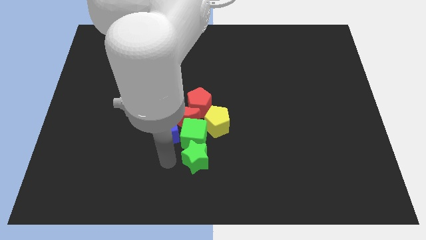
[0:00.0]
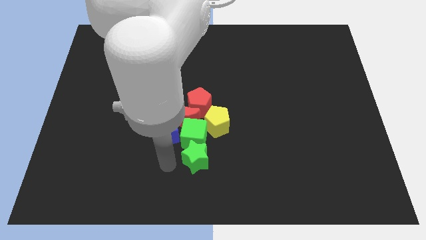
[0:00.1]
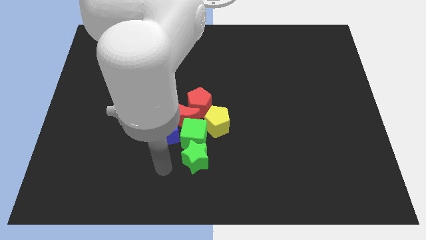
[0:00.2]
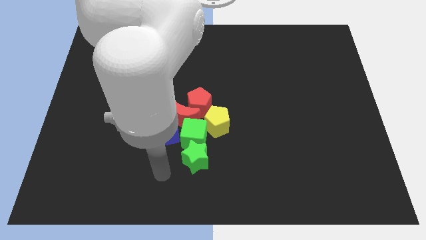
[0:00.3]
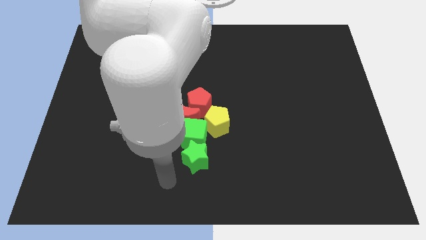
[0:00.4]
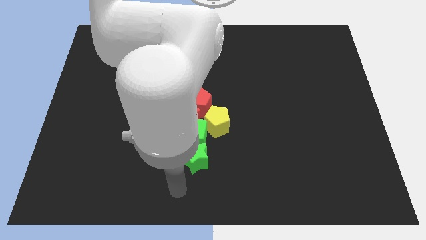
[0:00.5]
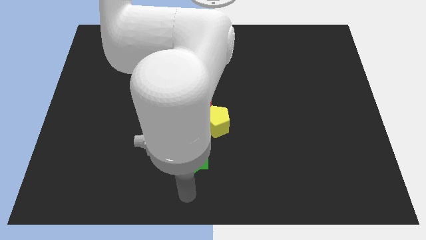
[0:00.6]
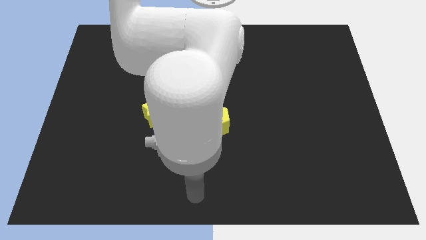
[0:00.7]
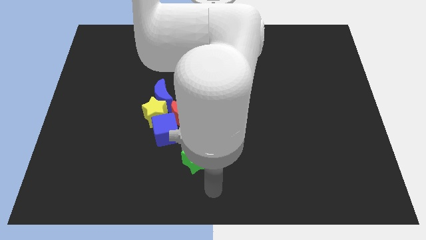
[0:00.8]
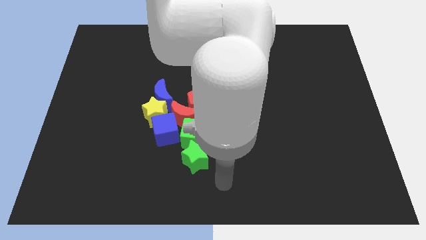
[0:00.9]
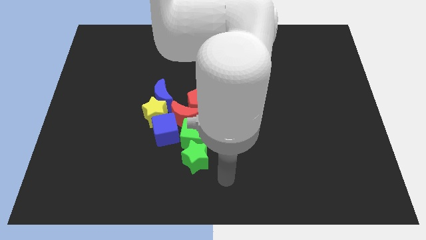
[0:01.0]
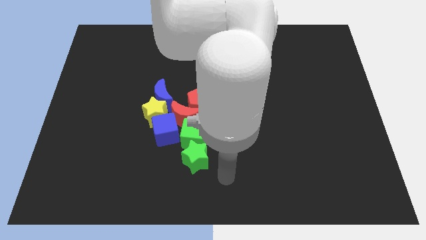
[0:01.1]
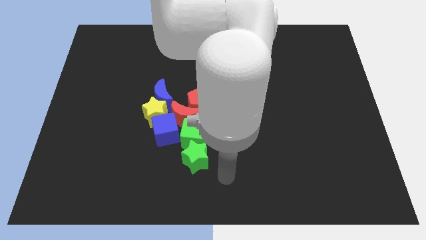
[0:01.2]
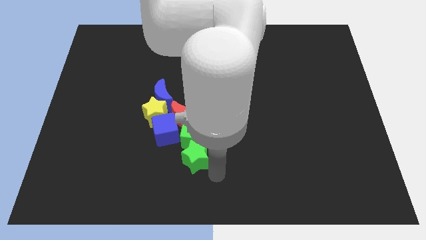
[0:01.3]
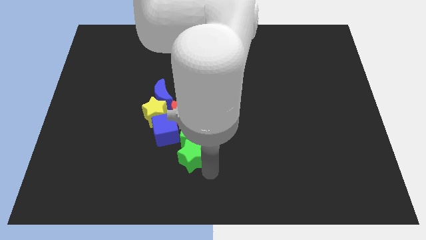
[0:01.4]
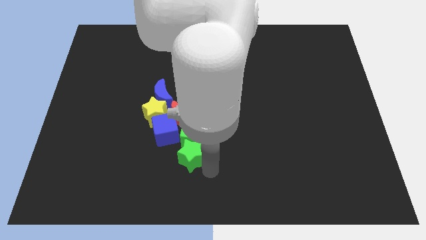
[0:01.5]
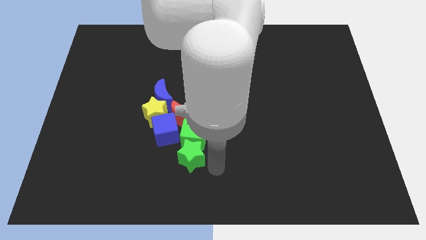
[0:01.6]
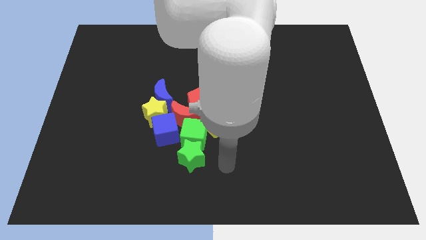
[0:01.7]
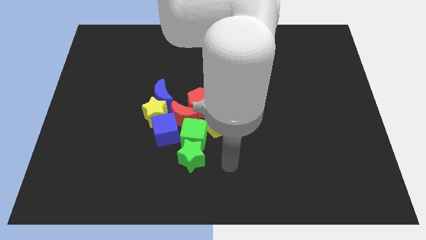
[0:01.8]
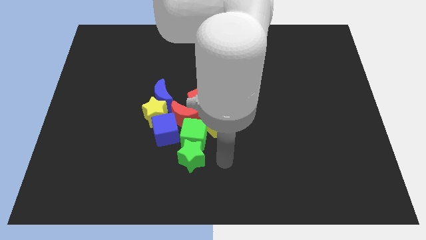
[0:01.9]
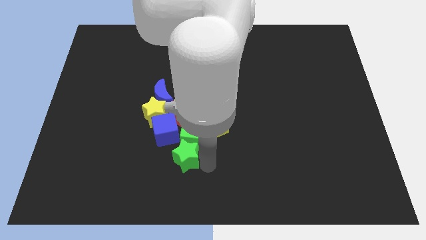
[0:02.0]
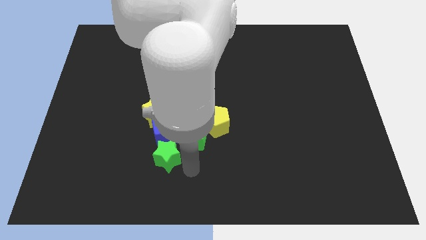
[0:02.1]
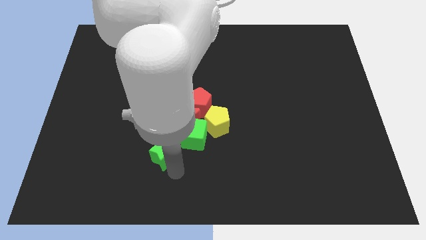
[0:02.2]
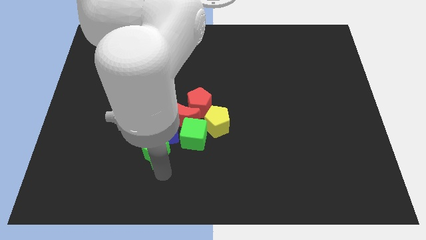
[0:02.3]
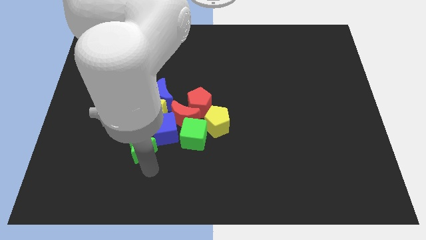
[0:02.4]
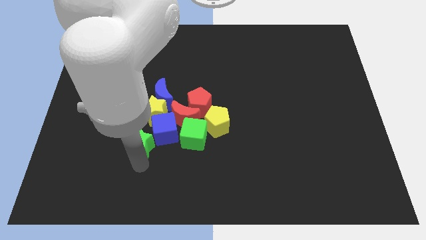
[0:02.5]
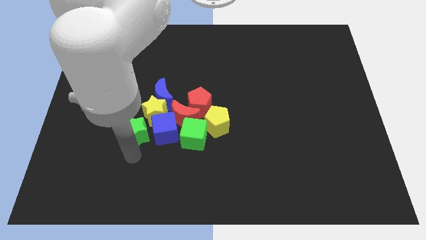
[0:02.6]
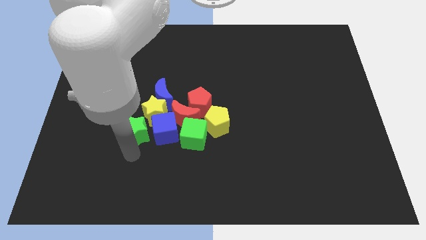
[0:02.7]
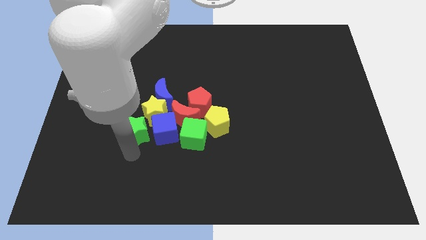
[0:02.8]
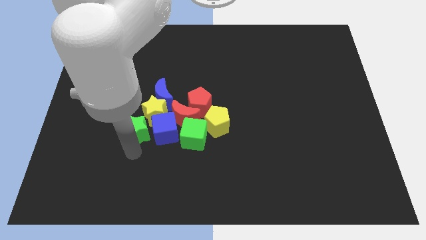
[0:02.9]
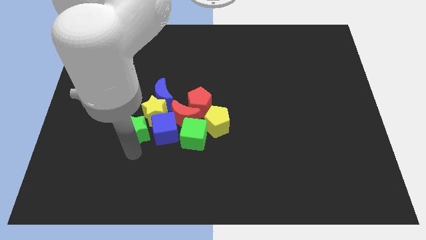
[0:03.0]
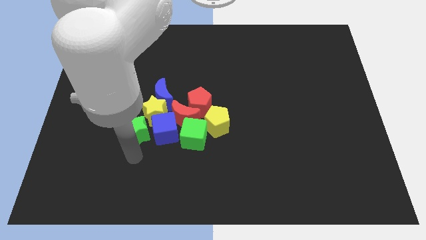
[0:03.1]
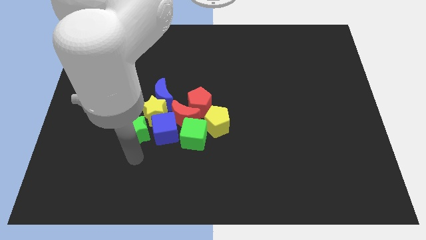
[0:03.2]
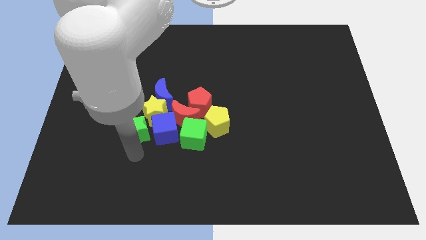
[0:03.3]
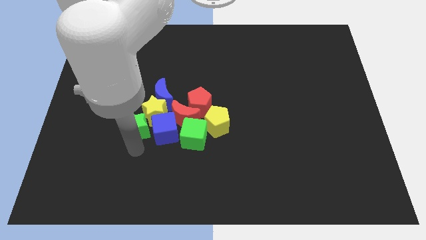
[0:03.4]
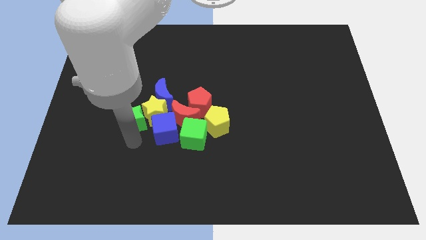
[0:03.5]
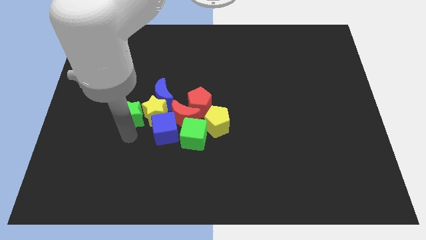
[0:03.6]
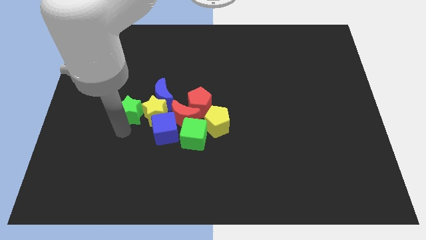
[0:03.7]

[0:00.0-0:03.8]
move green star to the left of yellow star

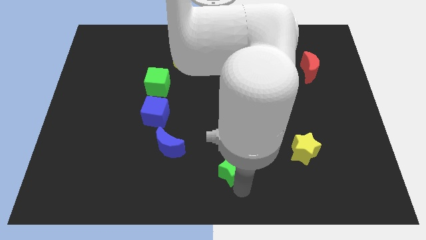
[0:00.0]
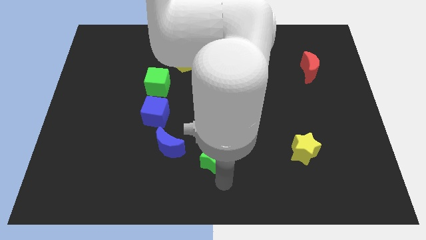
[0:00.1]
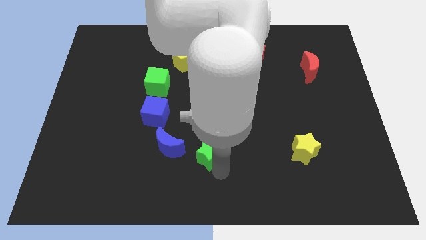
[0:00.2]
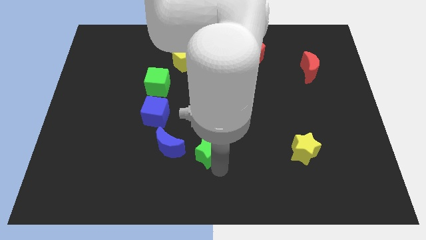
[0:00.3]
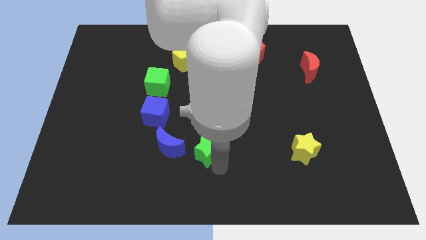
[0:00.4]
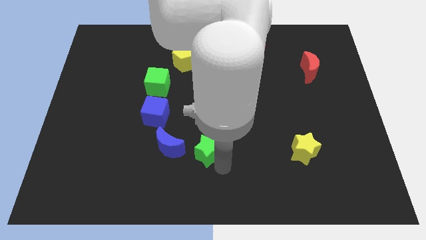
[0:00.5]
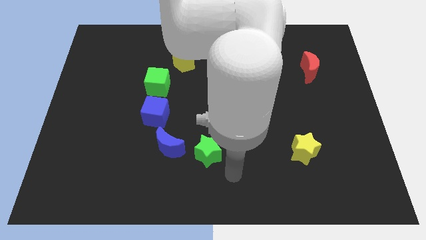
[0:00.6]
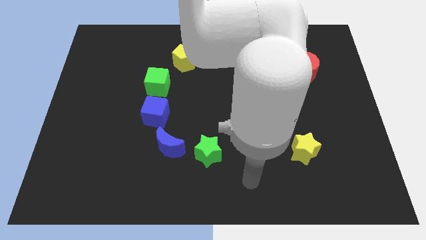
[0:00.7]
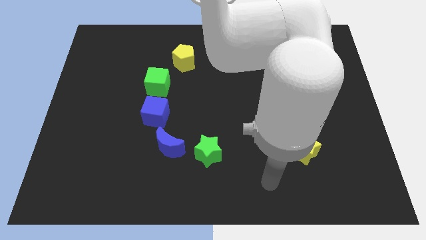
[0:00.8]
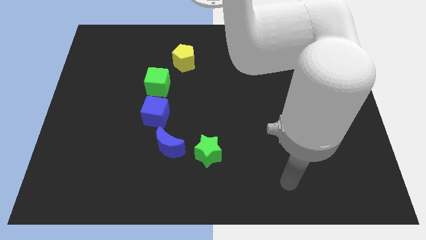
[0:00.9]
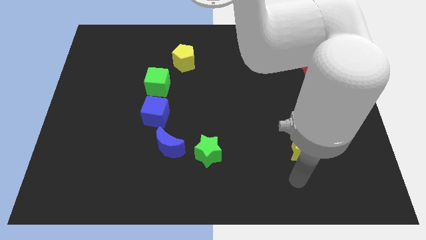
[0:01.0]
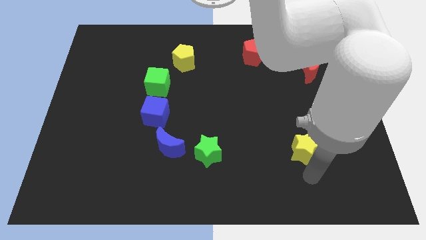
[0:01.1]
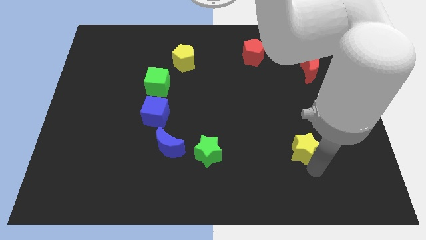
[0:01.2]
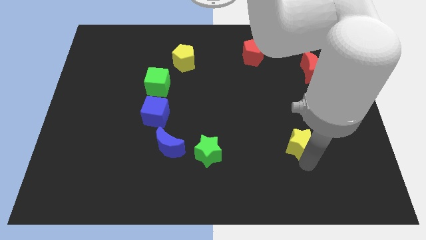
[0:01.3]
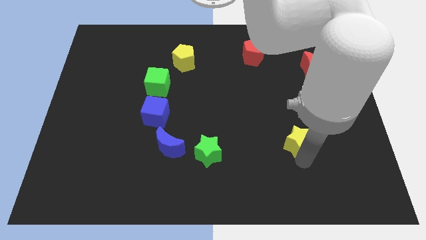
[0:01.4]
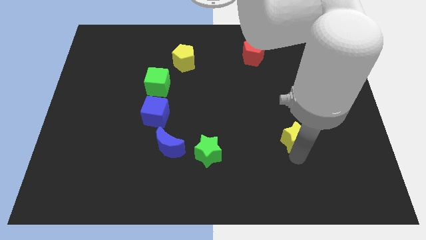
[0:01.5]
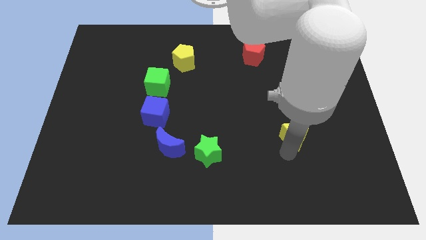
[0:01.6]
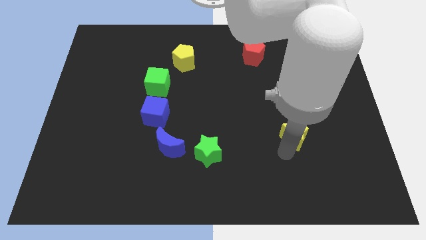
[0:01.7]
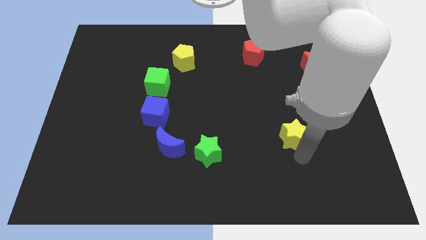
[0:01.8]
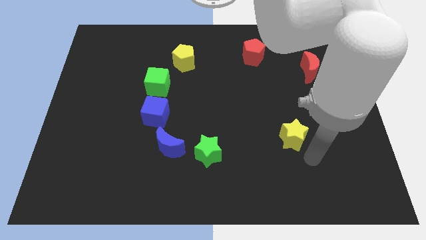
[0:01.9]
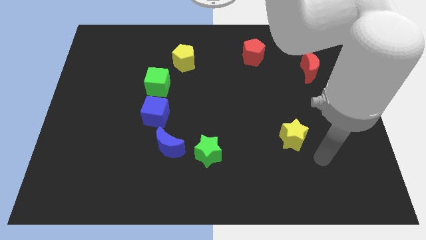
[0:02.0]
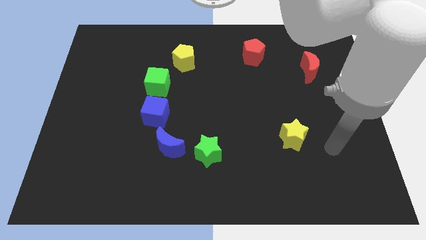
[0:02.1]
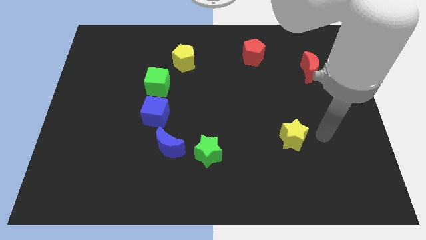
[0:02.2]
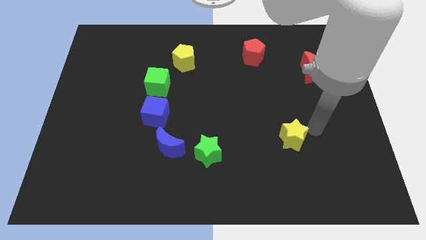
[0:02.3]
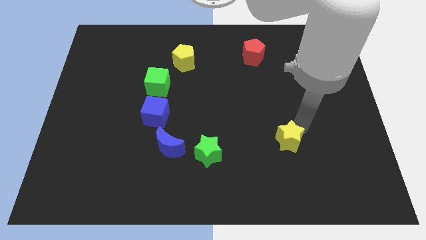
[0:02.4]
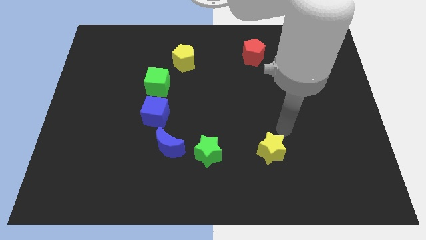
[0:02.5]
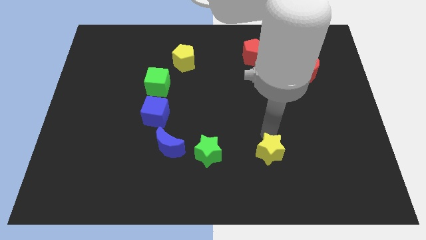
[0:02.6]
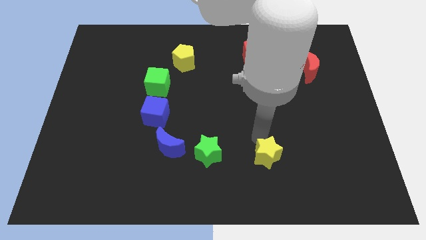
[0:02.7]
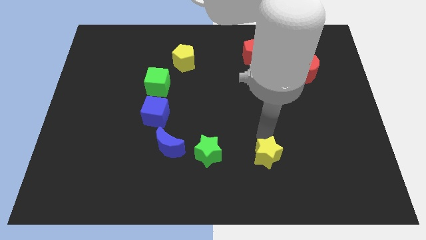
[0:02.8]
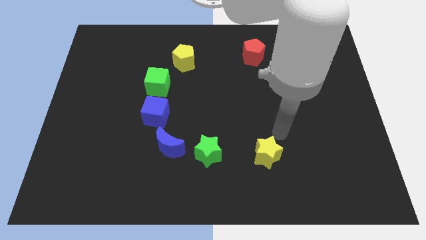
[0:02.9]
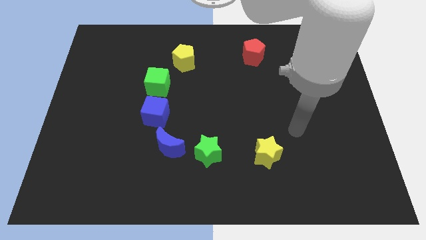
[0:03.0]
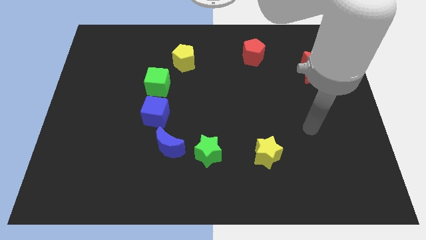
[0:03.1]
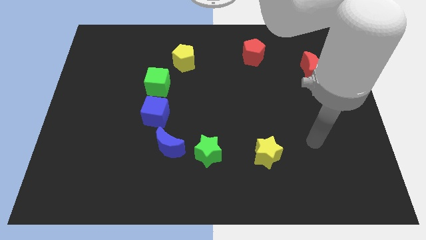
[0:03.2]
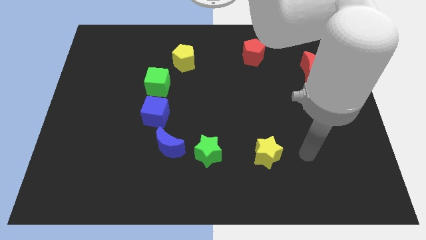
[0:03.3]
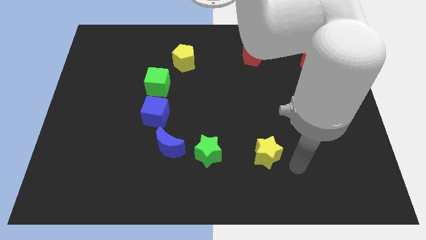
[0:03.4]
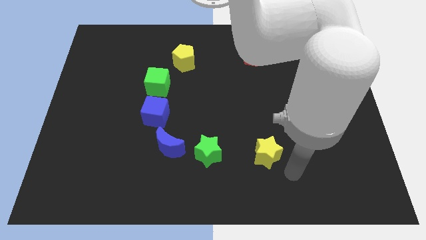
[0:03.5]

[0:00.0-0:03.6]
place green star right to blue moon

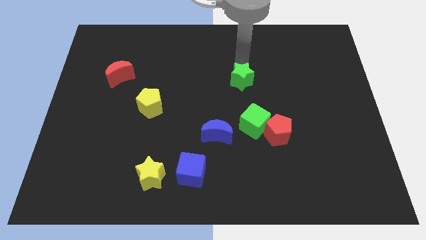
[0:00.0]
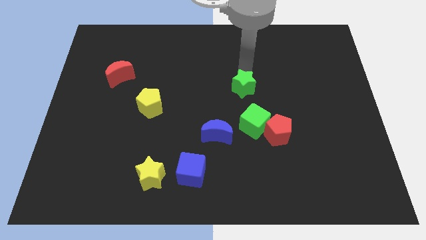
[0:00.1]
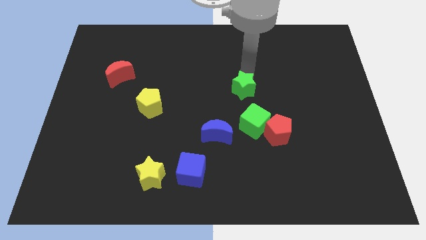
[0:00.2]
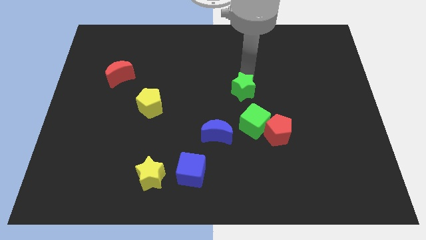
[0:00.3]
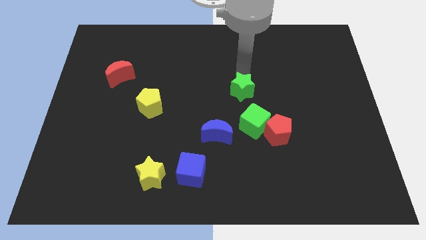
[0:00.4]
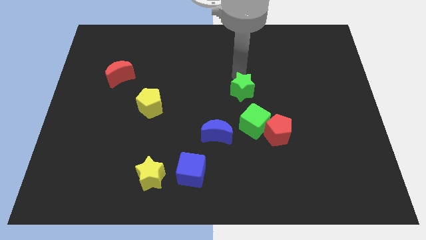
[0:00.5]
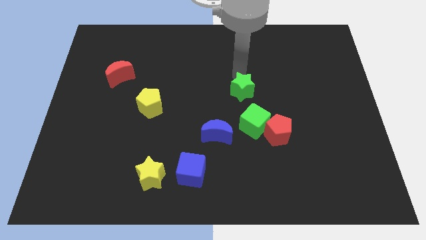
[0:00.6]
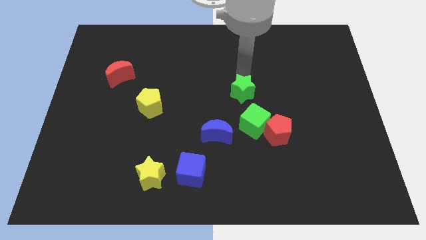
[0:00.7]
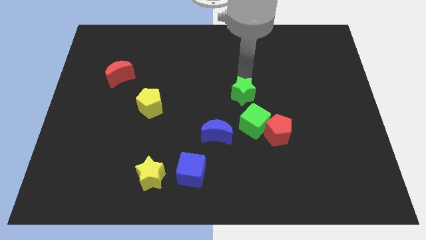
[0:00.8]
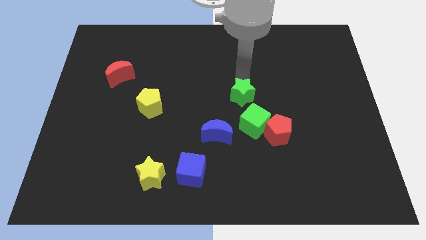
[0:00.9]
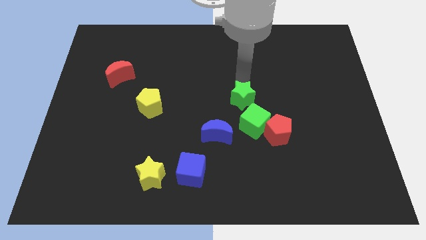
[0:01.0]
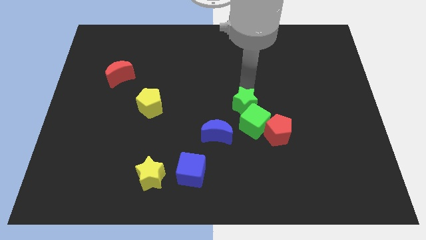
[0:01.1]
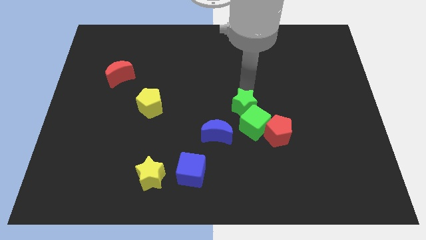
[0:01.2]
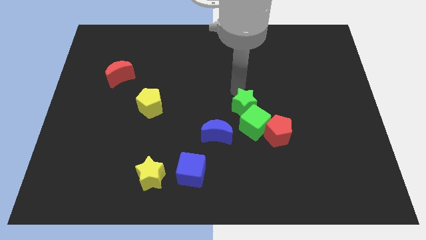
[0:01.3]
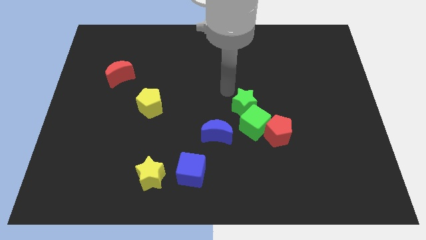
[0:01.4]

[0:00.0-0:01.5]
push the green star into the green cube
